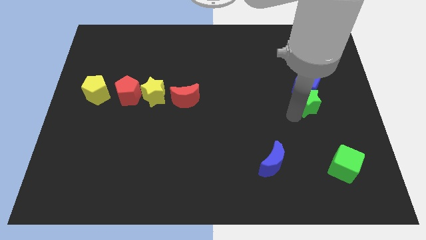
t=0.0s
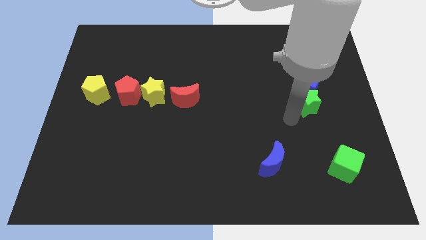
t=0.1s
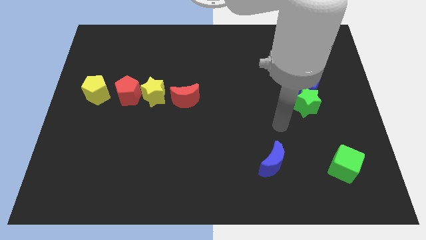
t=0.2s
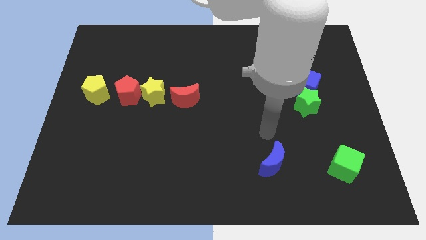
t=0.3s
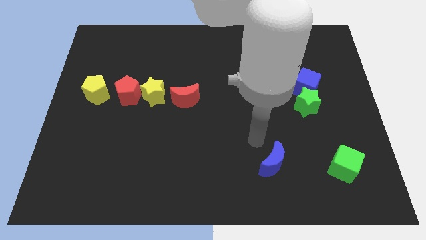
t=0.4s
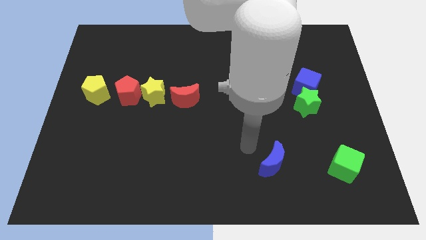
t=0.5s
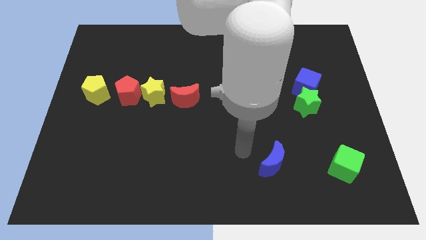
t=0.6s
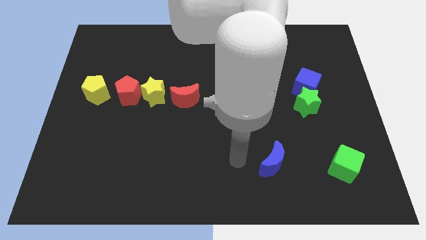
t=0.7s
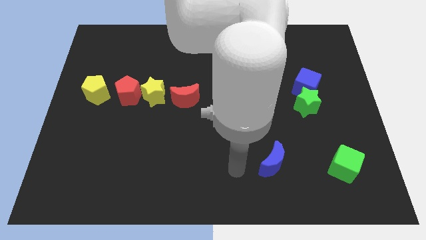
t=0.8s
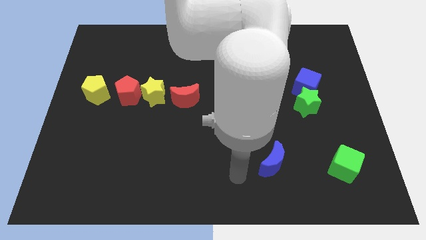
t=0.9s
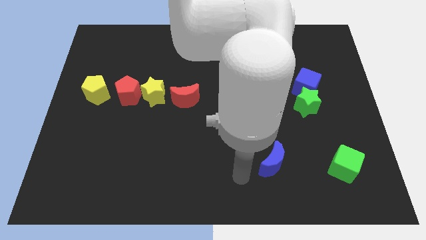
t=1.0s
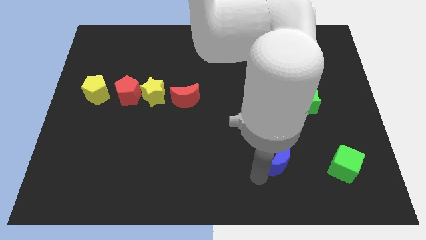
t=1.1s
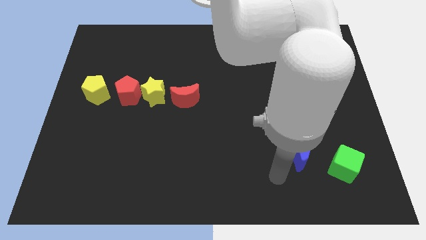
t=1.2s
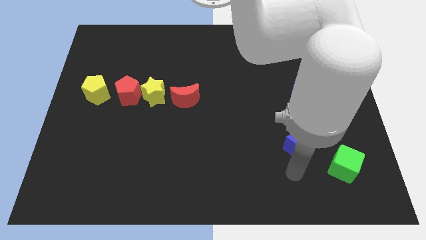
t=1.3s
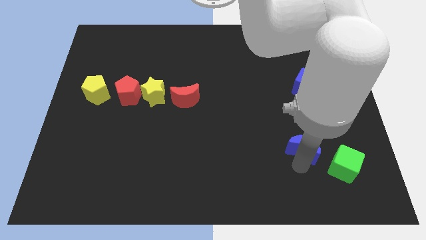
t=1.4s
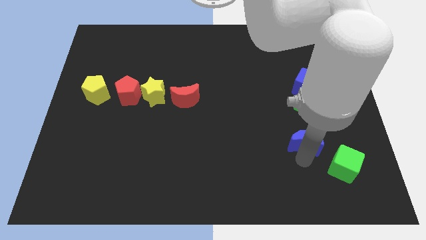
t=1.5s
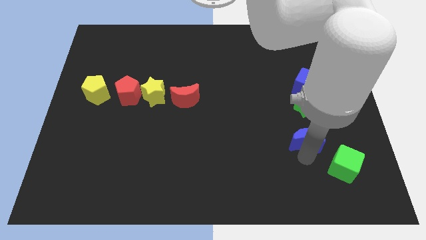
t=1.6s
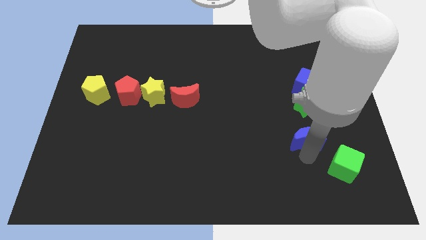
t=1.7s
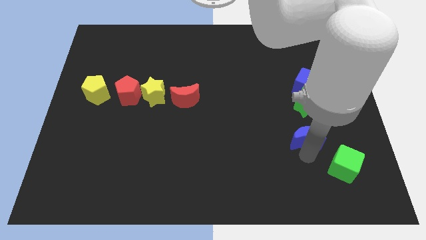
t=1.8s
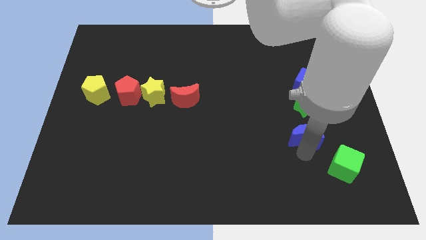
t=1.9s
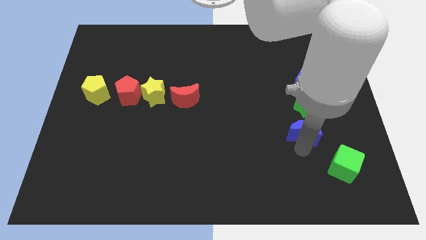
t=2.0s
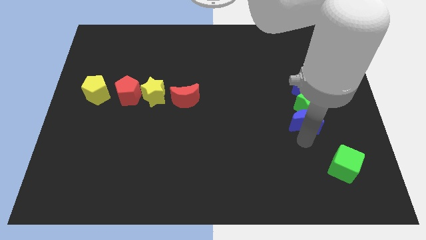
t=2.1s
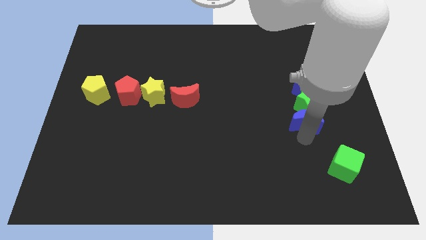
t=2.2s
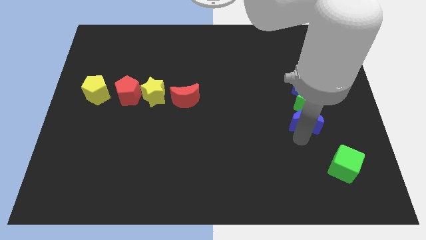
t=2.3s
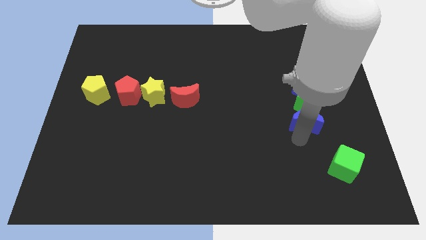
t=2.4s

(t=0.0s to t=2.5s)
move the blue moon at the bottom of green star

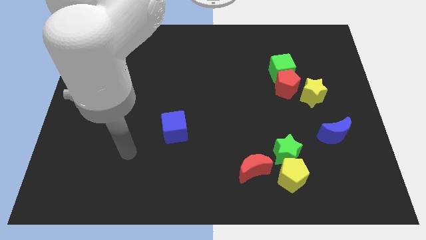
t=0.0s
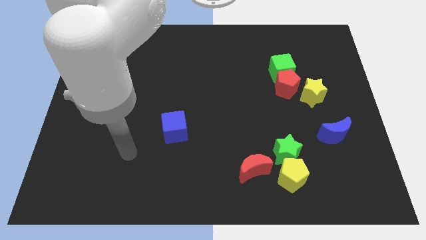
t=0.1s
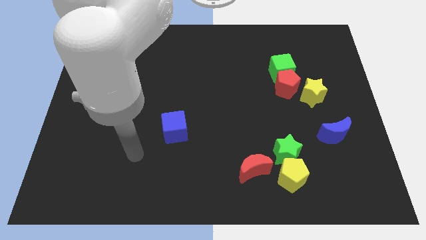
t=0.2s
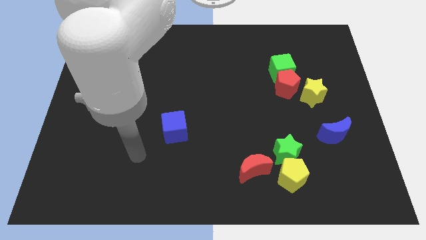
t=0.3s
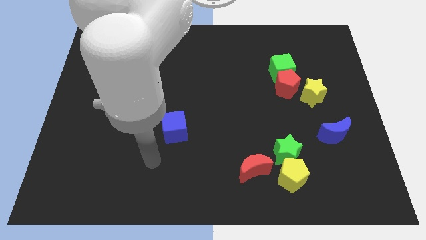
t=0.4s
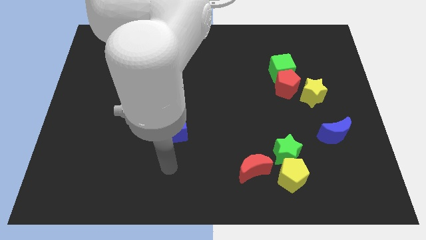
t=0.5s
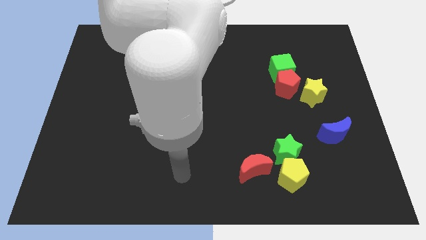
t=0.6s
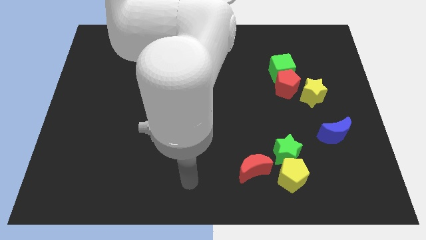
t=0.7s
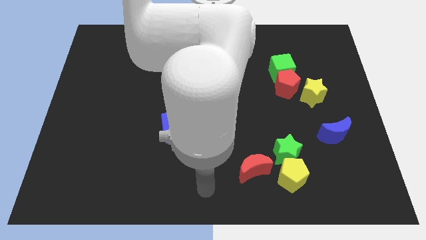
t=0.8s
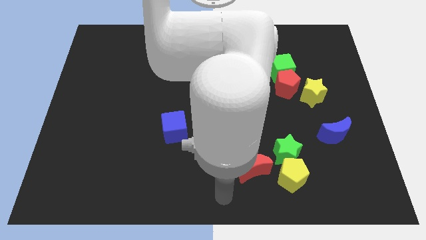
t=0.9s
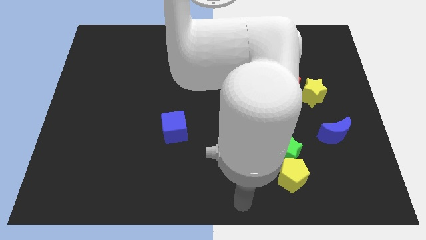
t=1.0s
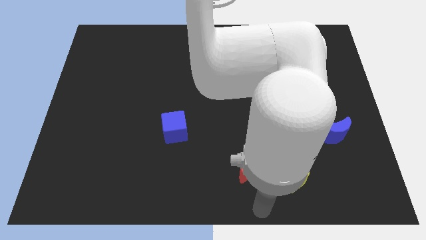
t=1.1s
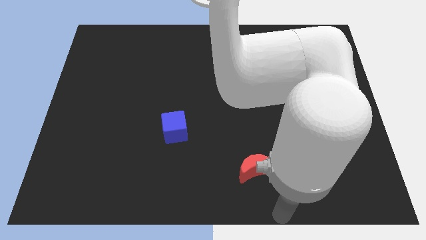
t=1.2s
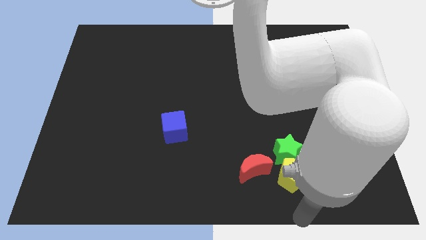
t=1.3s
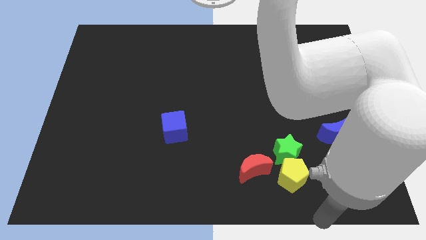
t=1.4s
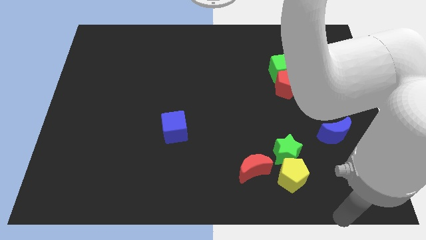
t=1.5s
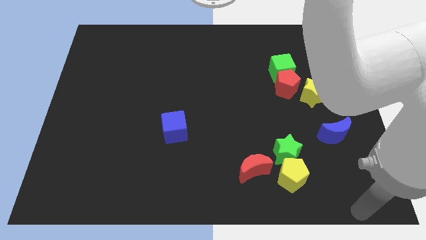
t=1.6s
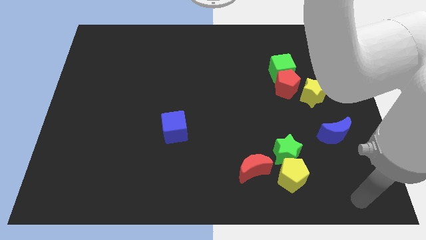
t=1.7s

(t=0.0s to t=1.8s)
place your arm towards the bottom right

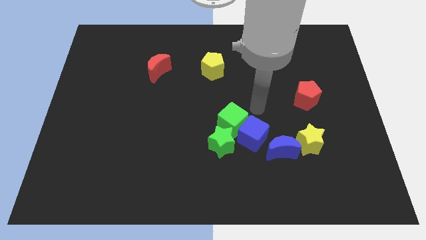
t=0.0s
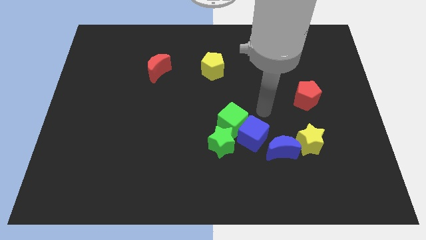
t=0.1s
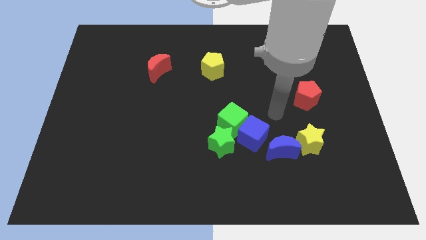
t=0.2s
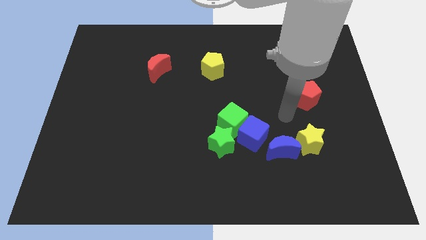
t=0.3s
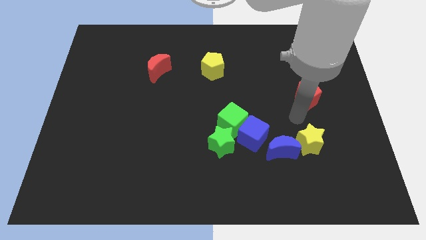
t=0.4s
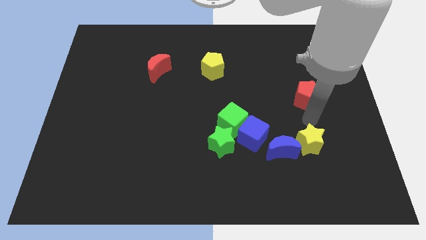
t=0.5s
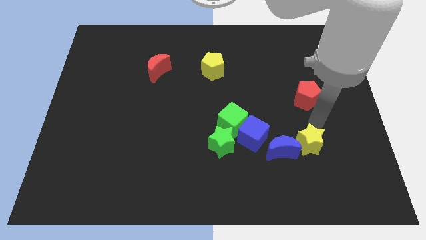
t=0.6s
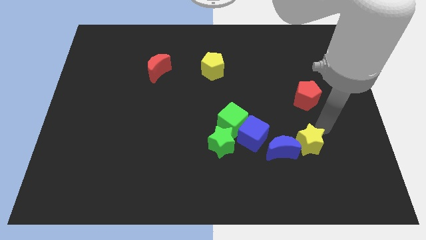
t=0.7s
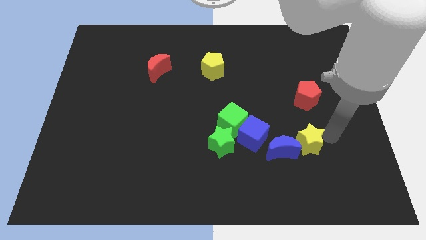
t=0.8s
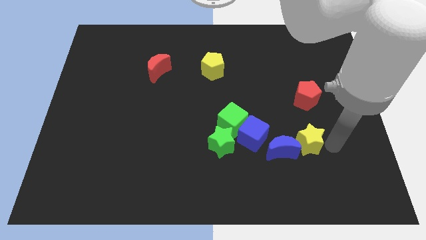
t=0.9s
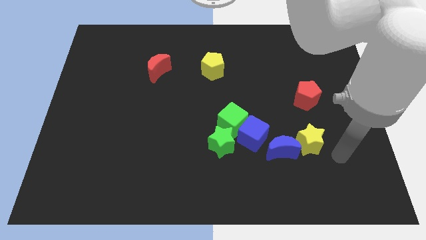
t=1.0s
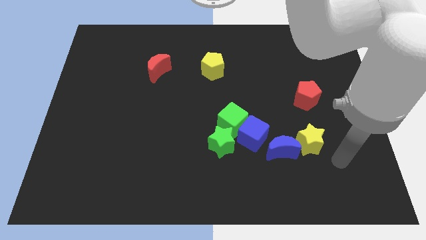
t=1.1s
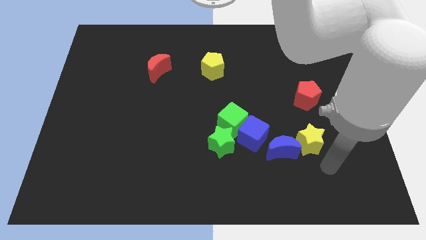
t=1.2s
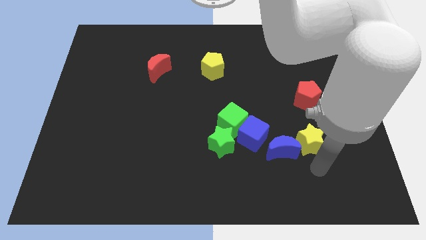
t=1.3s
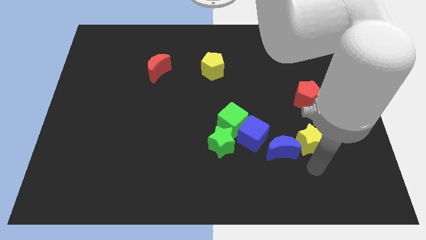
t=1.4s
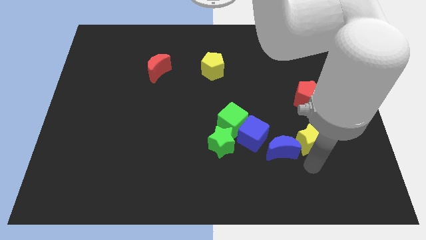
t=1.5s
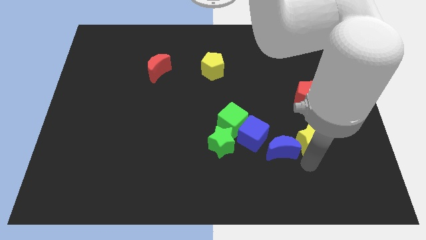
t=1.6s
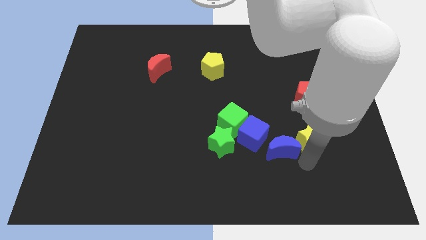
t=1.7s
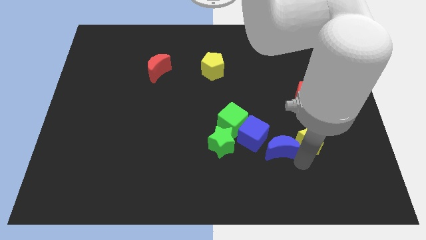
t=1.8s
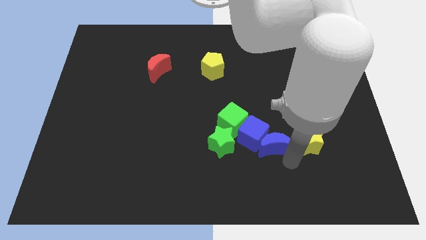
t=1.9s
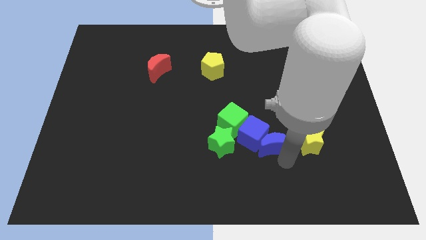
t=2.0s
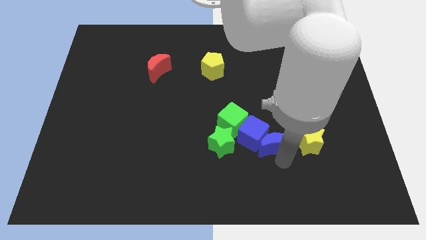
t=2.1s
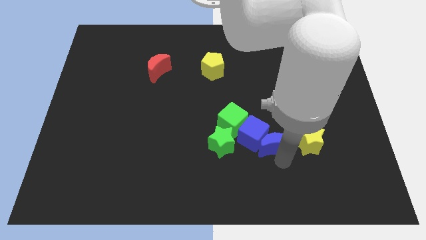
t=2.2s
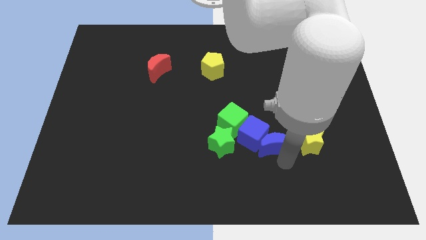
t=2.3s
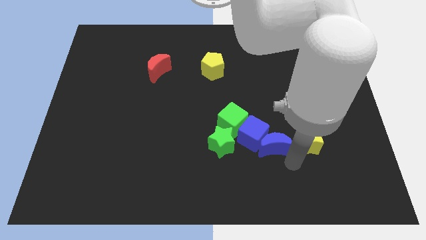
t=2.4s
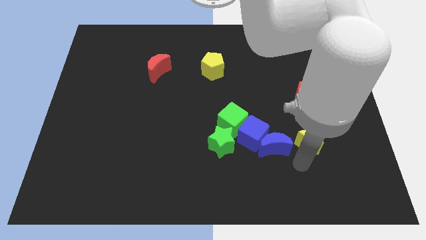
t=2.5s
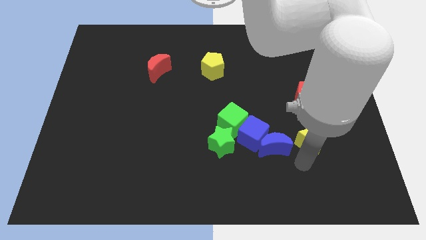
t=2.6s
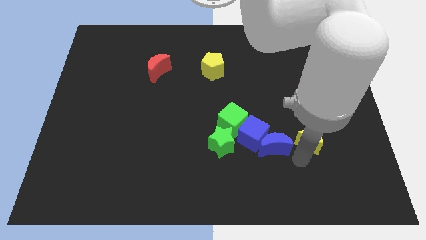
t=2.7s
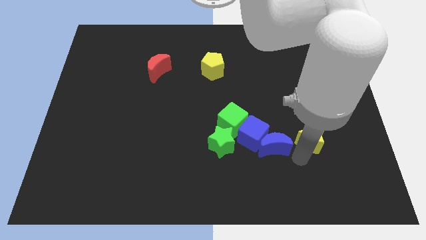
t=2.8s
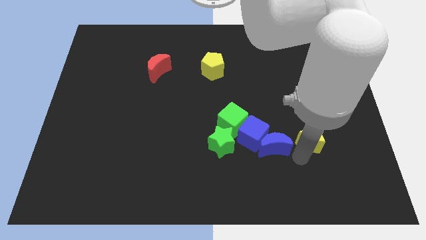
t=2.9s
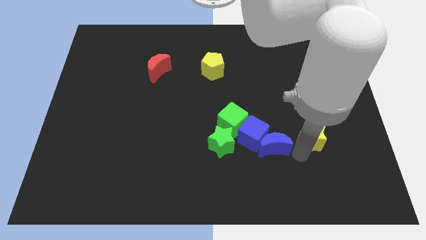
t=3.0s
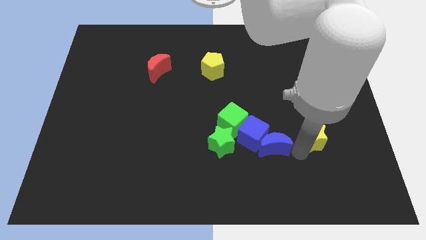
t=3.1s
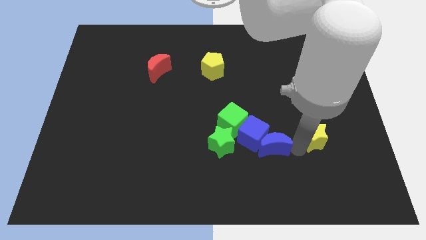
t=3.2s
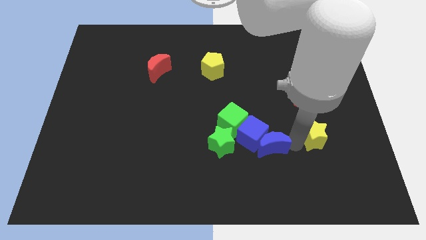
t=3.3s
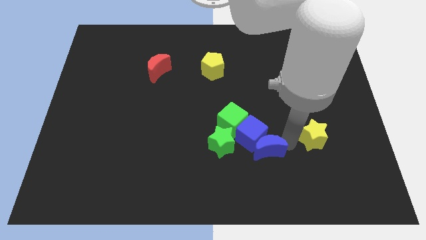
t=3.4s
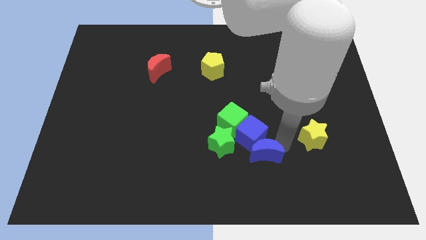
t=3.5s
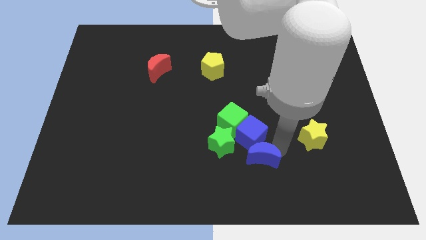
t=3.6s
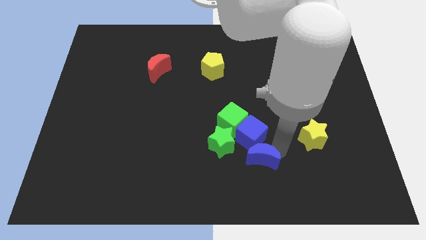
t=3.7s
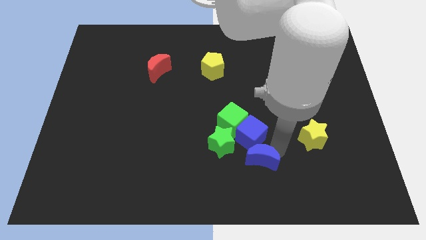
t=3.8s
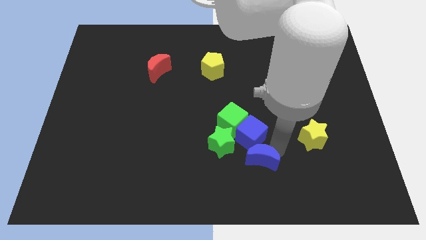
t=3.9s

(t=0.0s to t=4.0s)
move the blue crescent to the bottom of the blue cube

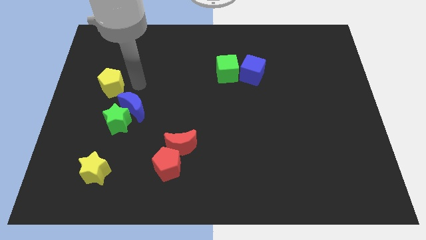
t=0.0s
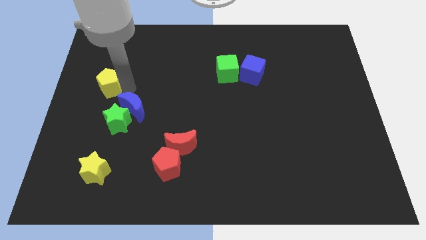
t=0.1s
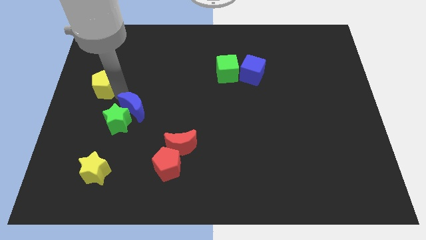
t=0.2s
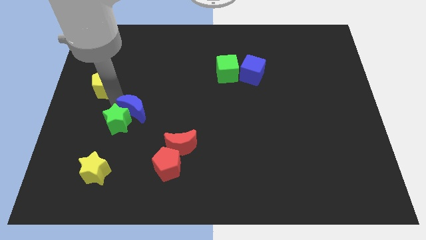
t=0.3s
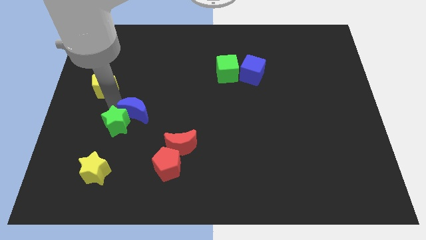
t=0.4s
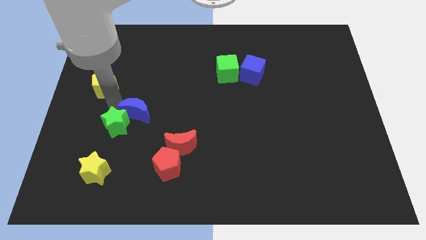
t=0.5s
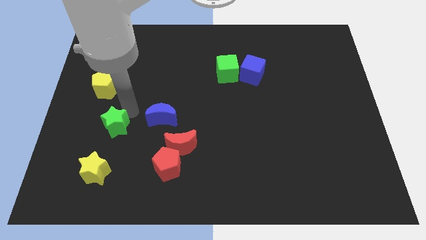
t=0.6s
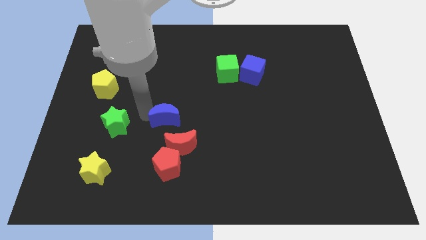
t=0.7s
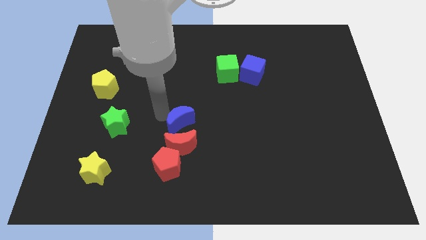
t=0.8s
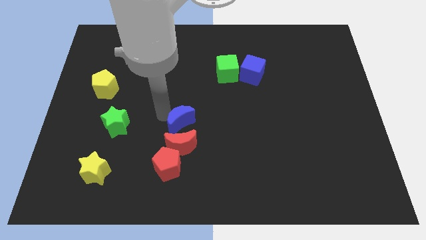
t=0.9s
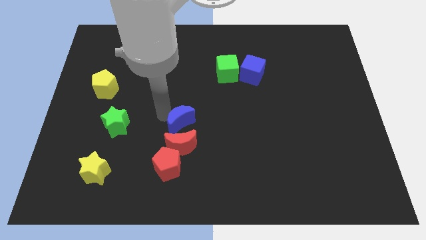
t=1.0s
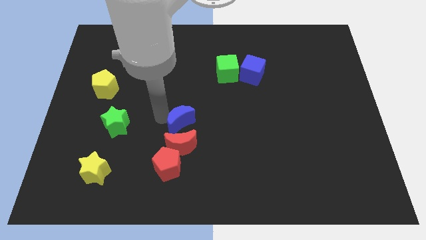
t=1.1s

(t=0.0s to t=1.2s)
put the blue moon vertically above the red moon
